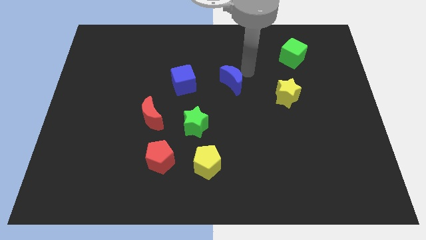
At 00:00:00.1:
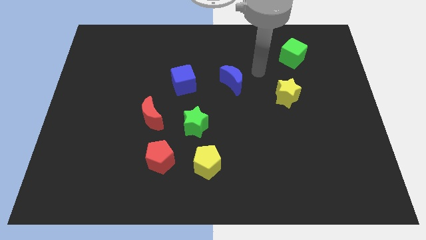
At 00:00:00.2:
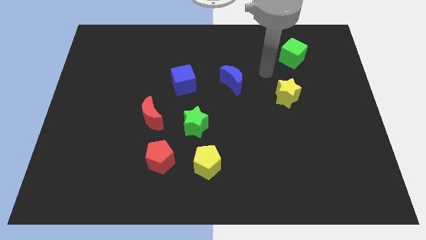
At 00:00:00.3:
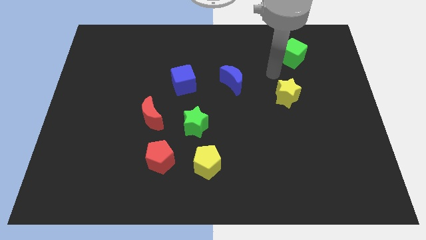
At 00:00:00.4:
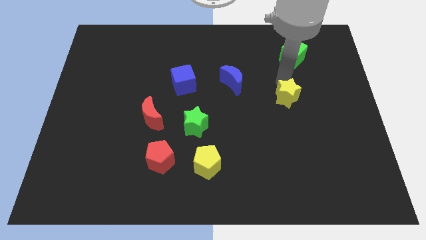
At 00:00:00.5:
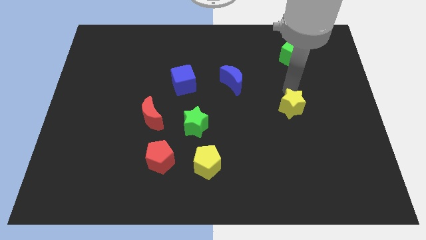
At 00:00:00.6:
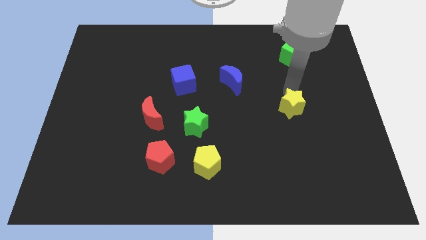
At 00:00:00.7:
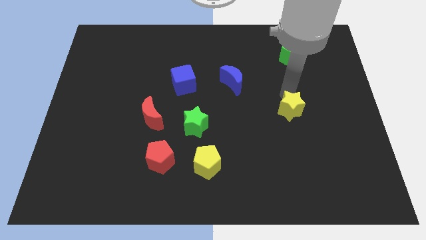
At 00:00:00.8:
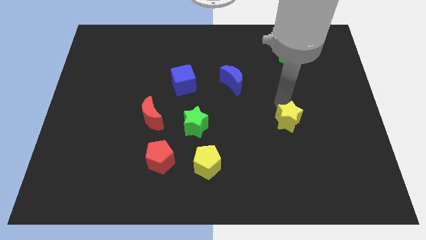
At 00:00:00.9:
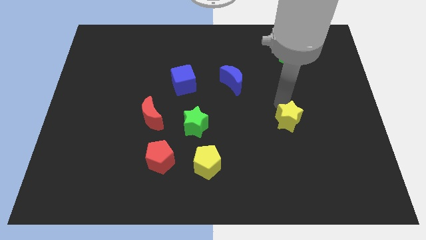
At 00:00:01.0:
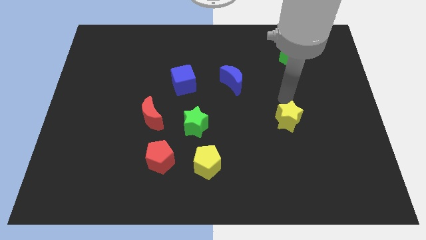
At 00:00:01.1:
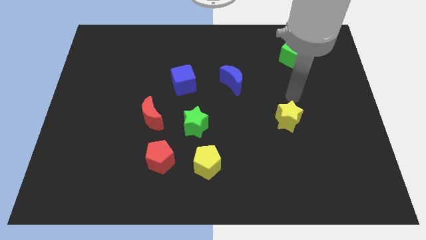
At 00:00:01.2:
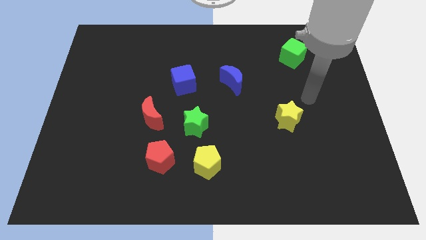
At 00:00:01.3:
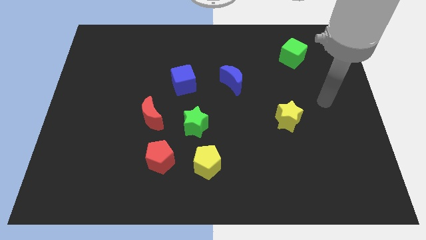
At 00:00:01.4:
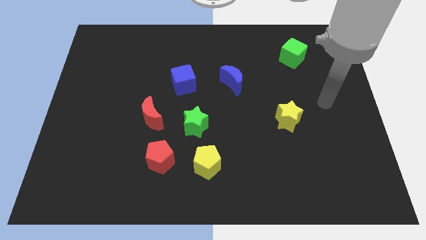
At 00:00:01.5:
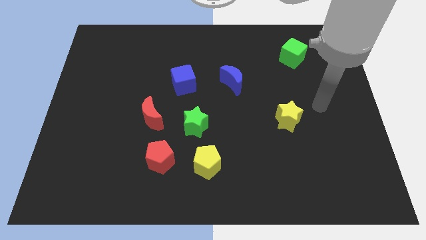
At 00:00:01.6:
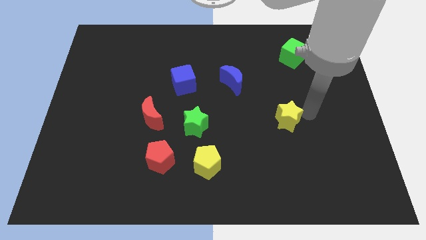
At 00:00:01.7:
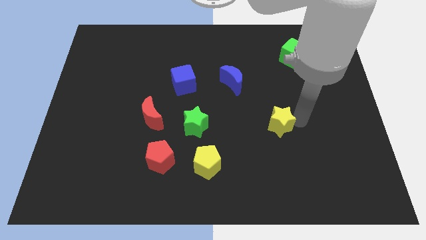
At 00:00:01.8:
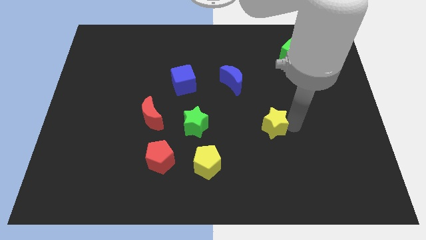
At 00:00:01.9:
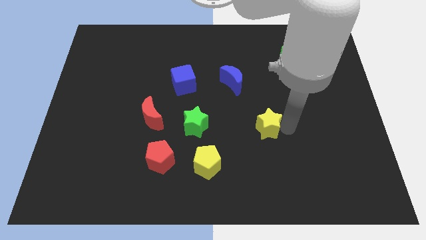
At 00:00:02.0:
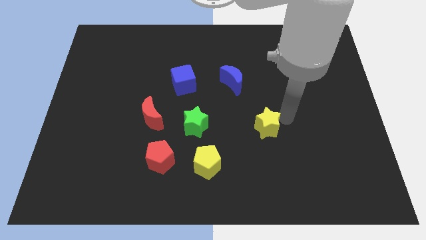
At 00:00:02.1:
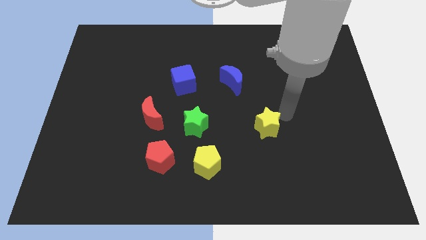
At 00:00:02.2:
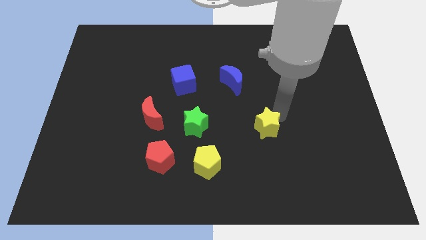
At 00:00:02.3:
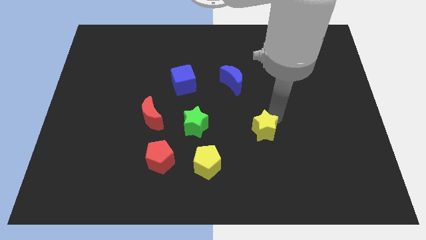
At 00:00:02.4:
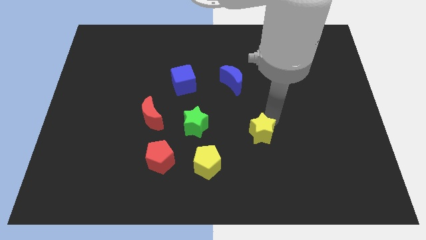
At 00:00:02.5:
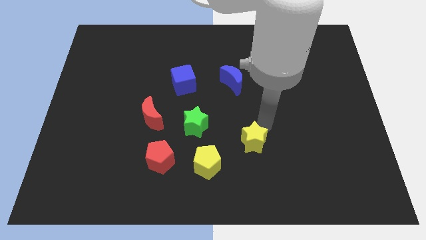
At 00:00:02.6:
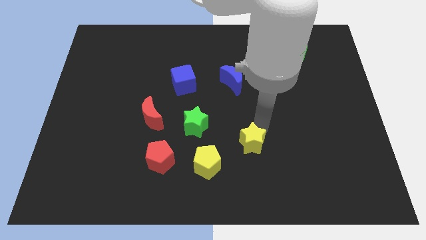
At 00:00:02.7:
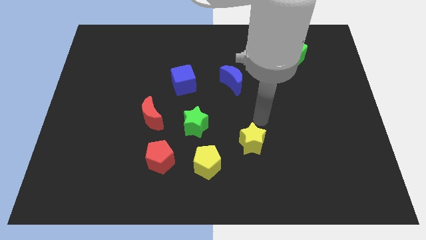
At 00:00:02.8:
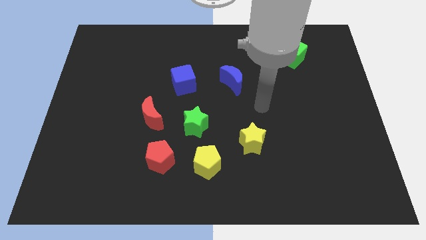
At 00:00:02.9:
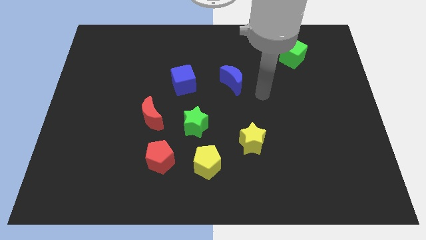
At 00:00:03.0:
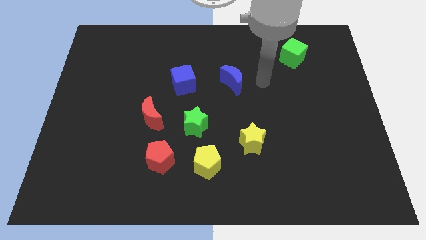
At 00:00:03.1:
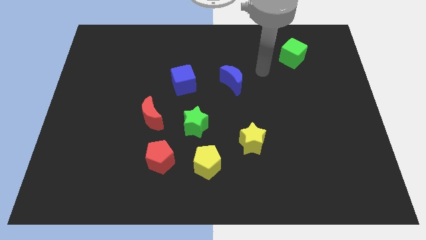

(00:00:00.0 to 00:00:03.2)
push the yellow star slightly towards the yellow pentagon

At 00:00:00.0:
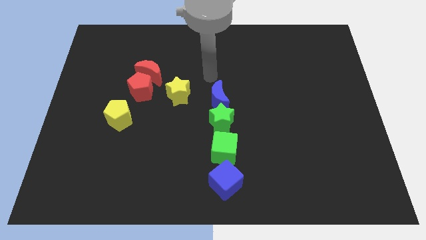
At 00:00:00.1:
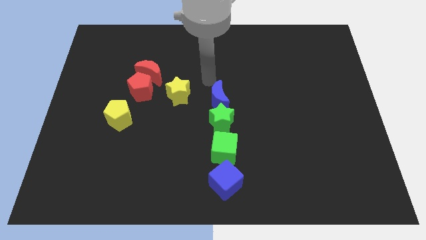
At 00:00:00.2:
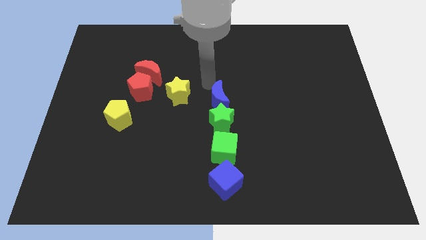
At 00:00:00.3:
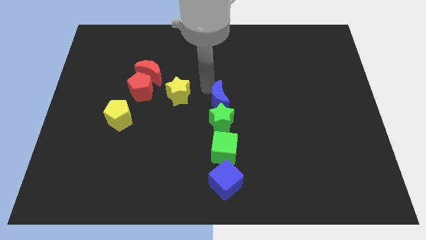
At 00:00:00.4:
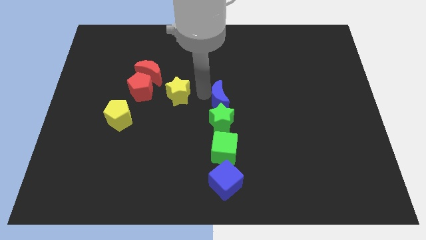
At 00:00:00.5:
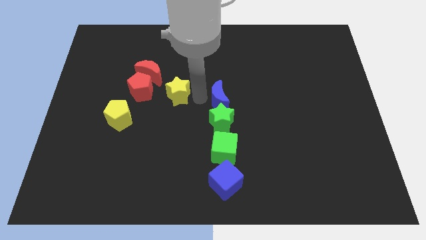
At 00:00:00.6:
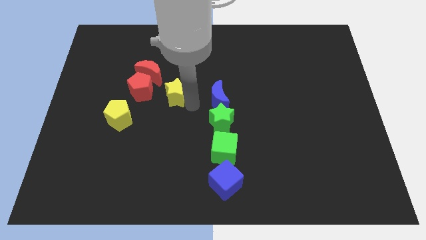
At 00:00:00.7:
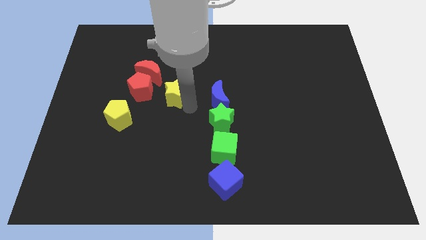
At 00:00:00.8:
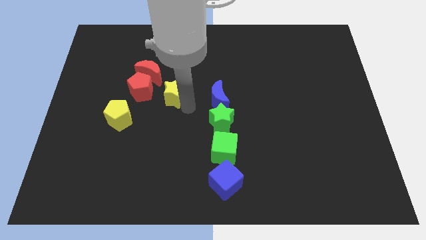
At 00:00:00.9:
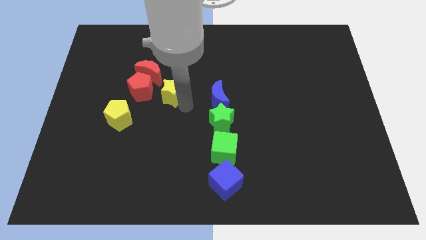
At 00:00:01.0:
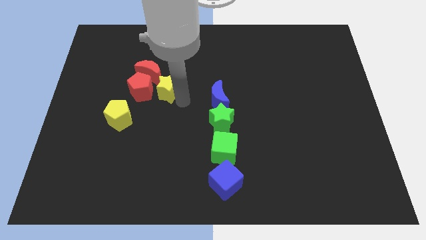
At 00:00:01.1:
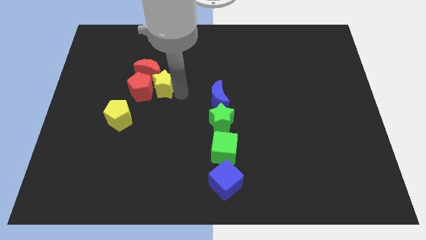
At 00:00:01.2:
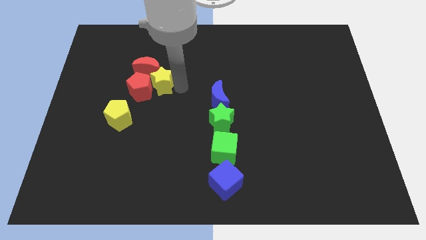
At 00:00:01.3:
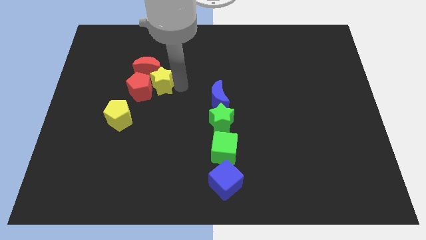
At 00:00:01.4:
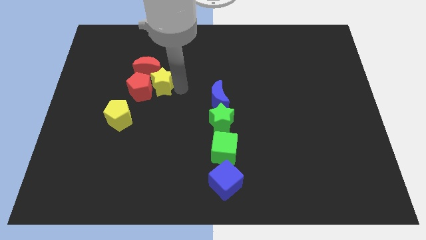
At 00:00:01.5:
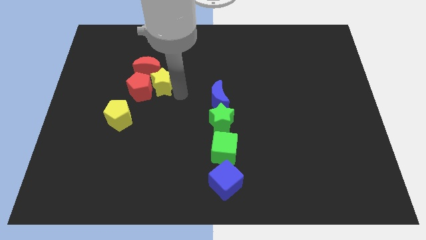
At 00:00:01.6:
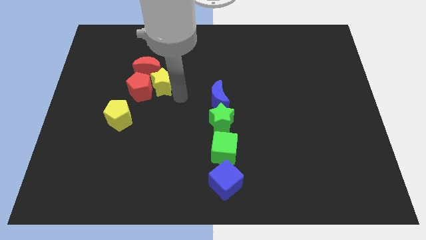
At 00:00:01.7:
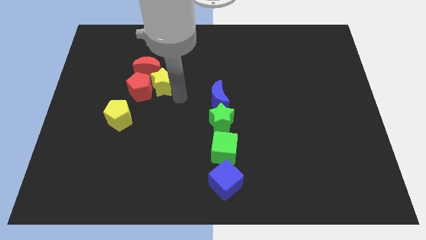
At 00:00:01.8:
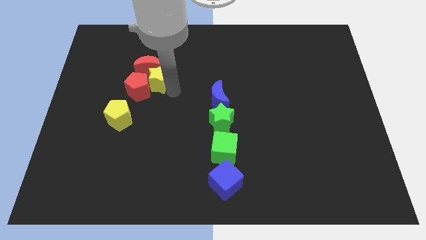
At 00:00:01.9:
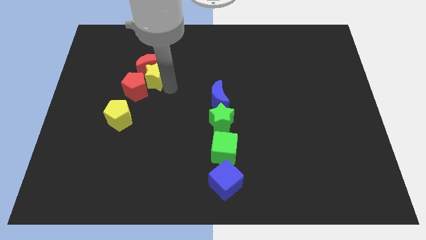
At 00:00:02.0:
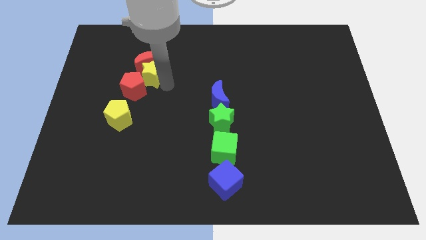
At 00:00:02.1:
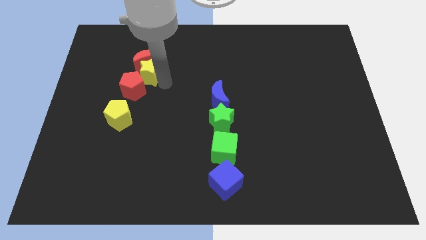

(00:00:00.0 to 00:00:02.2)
move the yellow star close to the red pentagon and red moon

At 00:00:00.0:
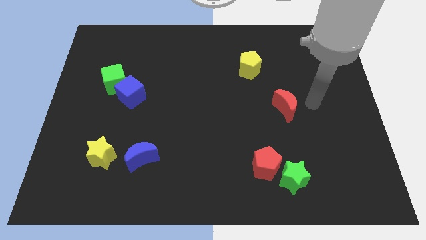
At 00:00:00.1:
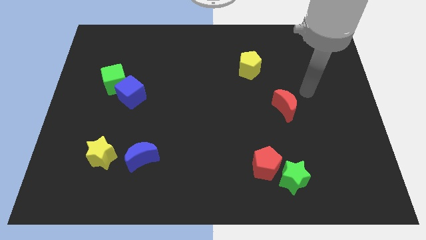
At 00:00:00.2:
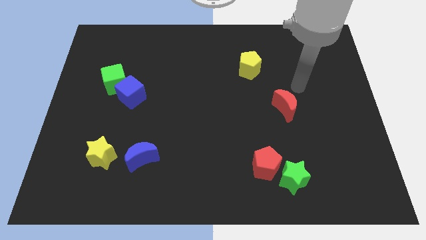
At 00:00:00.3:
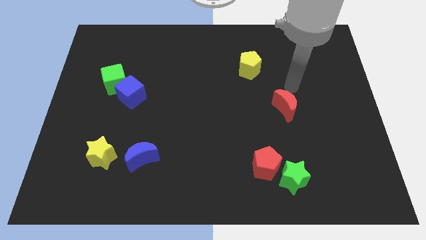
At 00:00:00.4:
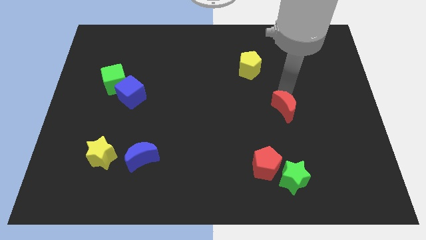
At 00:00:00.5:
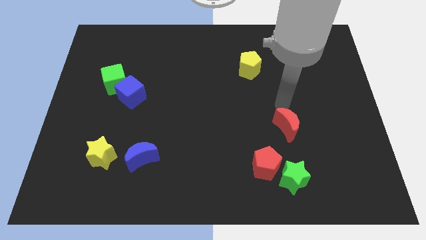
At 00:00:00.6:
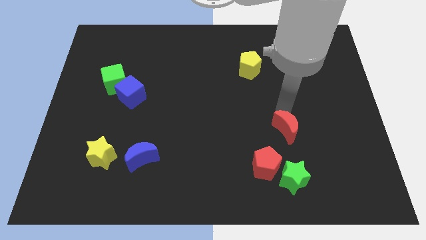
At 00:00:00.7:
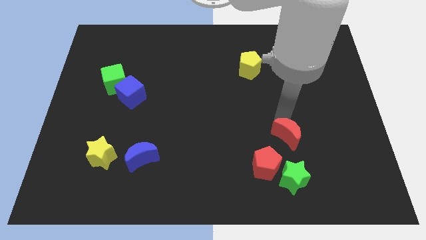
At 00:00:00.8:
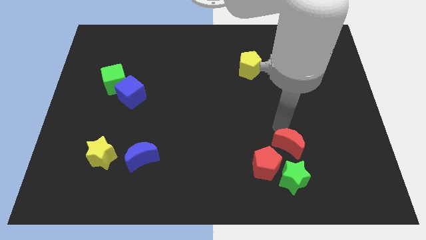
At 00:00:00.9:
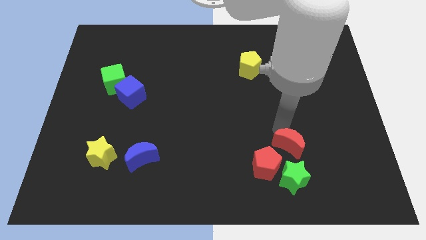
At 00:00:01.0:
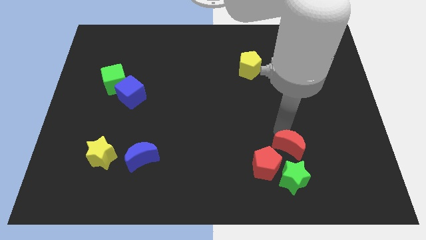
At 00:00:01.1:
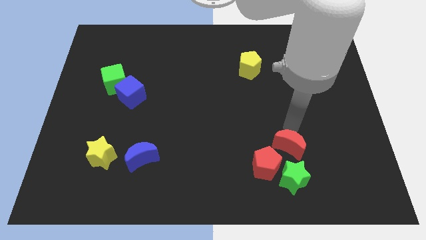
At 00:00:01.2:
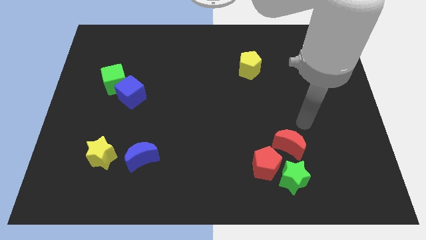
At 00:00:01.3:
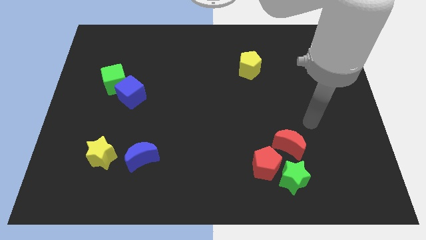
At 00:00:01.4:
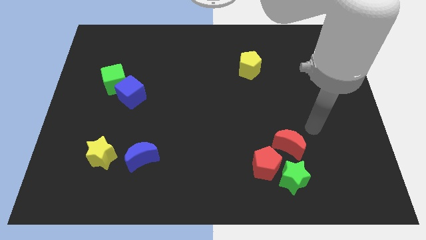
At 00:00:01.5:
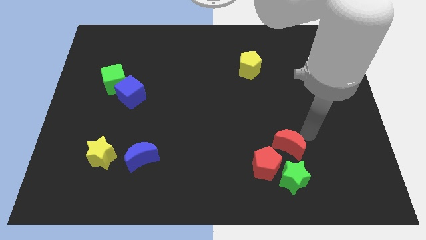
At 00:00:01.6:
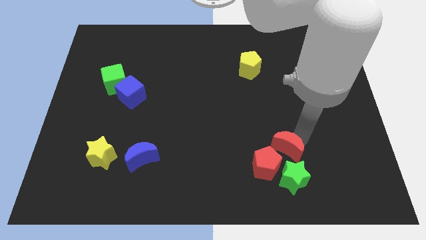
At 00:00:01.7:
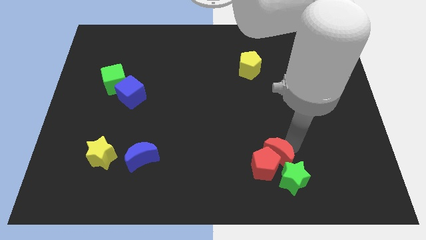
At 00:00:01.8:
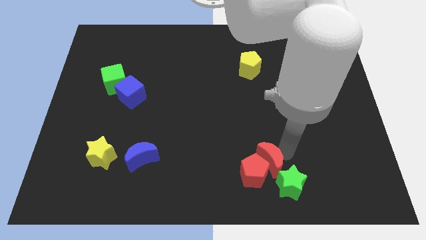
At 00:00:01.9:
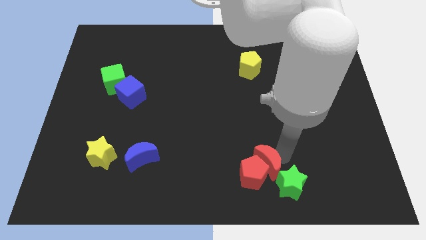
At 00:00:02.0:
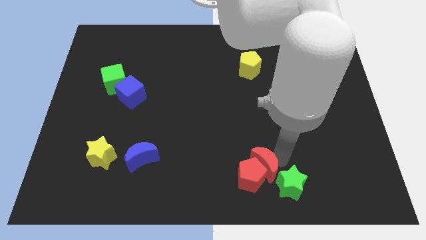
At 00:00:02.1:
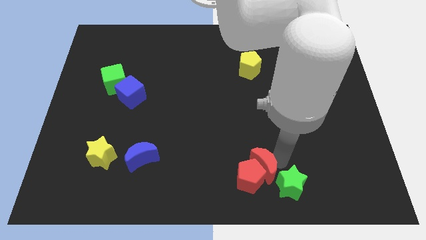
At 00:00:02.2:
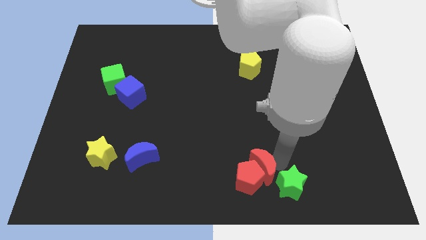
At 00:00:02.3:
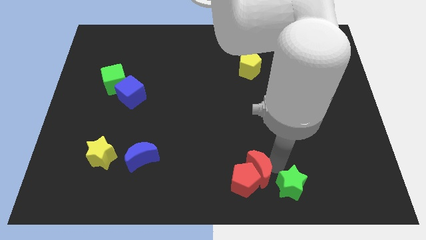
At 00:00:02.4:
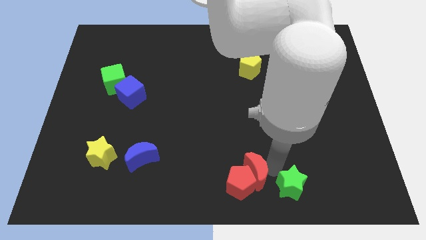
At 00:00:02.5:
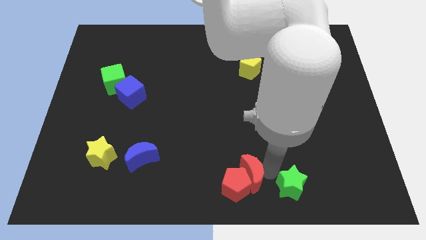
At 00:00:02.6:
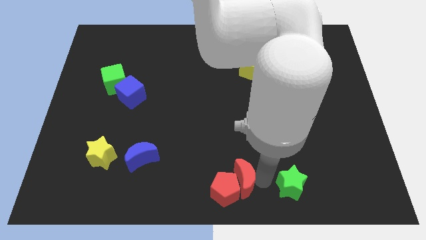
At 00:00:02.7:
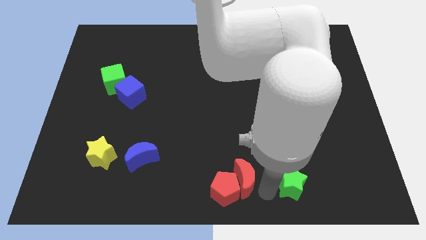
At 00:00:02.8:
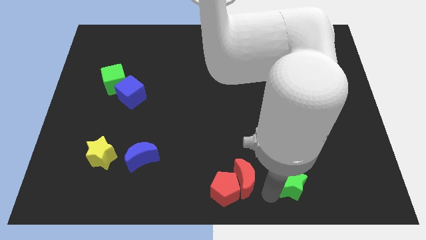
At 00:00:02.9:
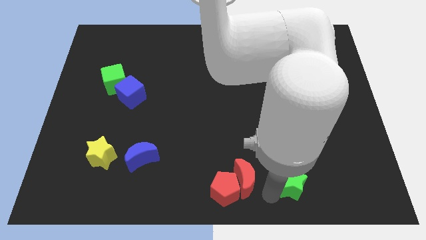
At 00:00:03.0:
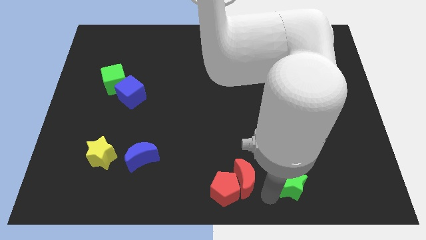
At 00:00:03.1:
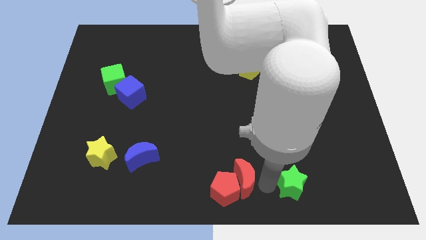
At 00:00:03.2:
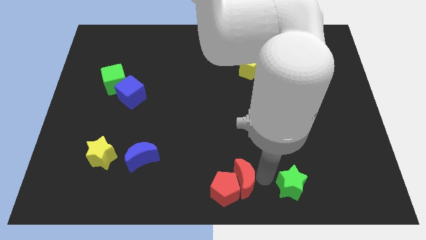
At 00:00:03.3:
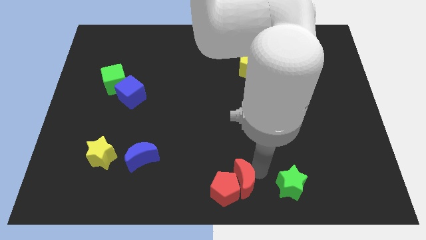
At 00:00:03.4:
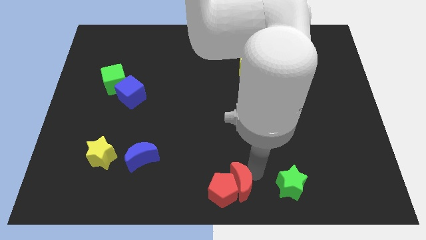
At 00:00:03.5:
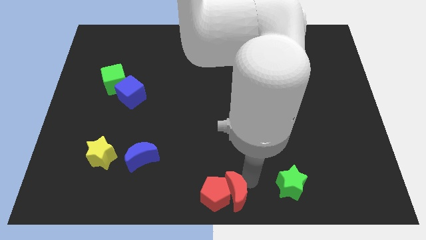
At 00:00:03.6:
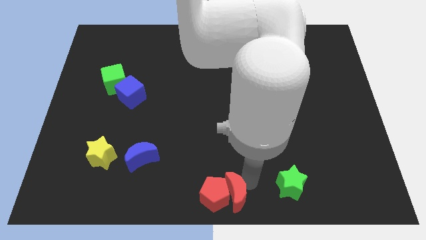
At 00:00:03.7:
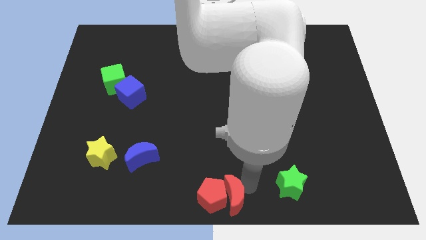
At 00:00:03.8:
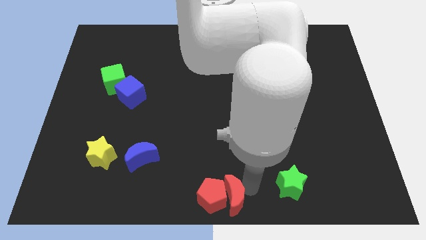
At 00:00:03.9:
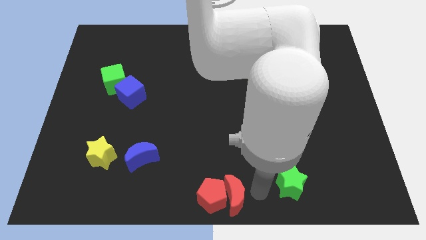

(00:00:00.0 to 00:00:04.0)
push the red blocks to the bottom center
